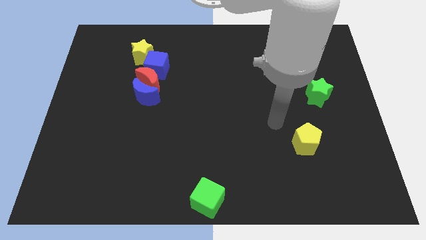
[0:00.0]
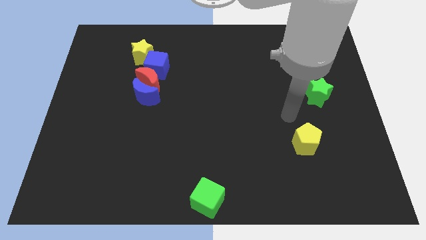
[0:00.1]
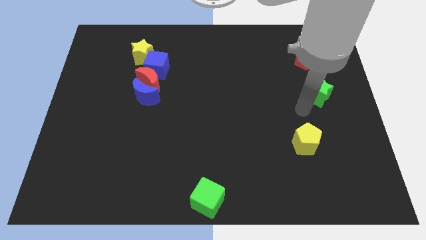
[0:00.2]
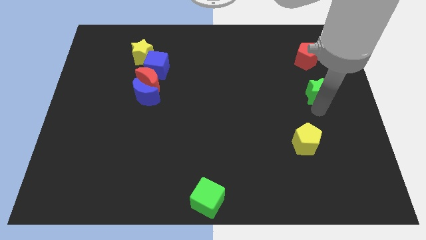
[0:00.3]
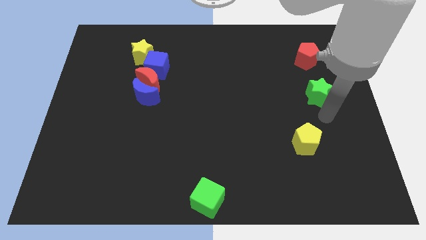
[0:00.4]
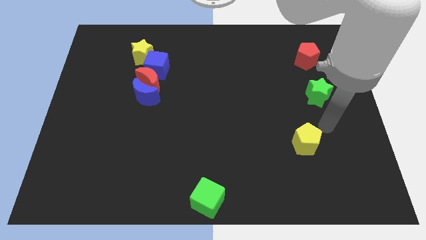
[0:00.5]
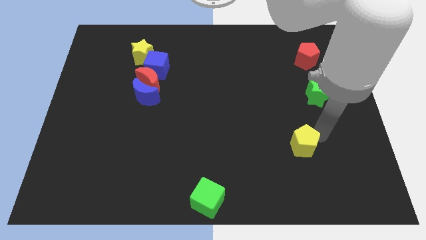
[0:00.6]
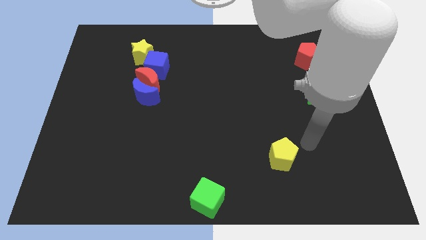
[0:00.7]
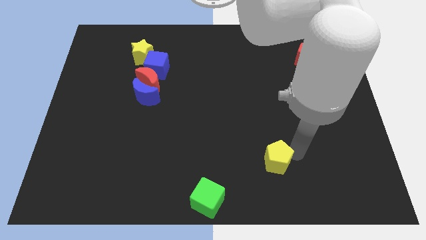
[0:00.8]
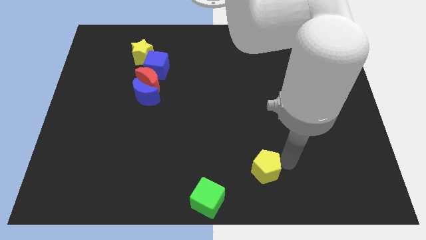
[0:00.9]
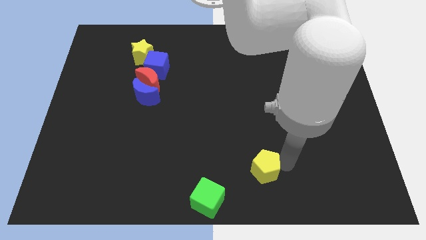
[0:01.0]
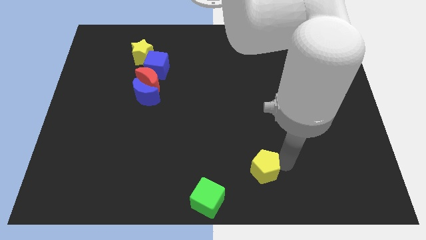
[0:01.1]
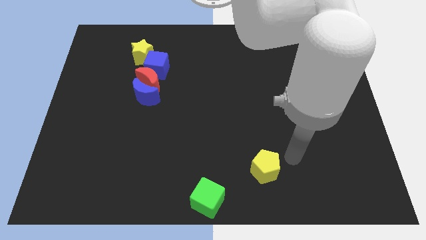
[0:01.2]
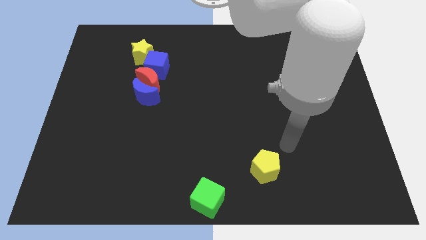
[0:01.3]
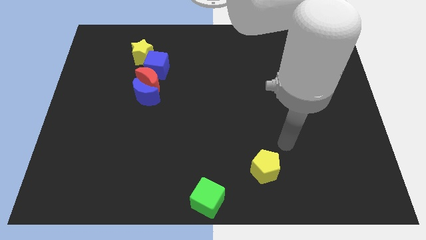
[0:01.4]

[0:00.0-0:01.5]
push yellow pentagon towards the green block

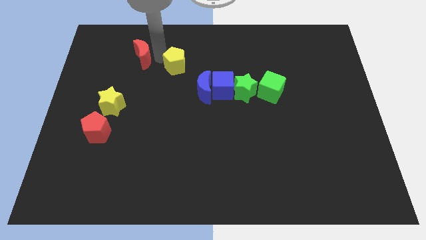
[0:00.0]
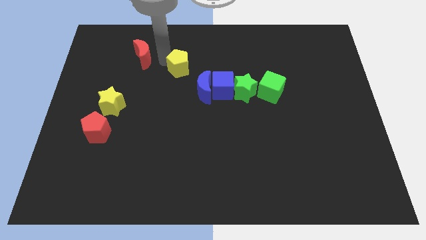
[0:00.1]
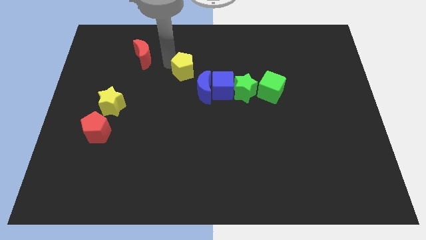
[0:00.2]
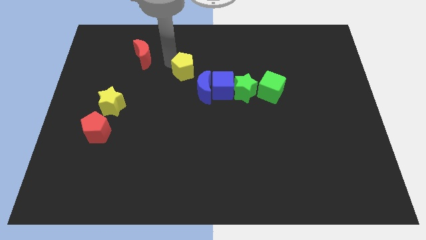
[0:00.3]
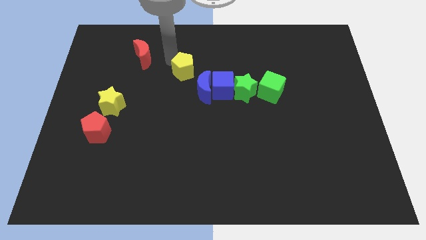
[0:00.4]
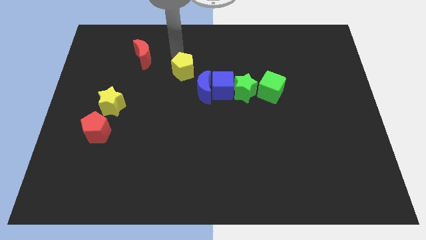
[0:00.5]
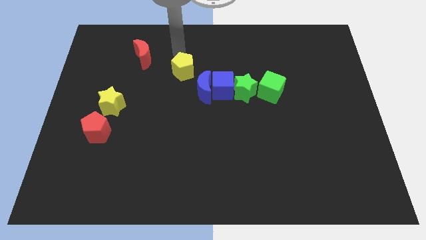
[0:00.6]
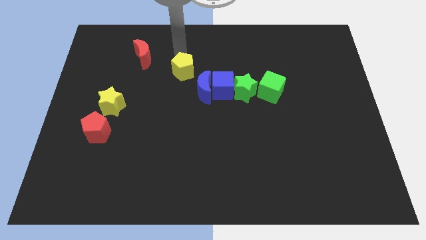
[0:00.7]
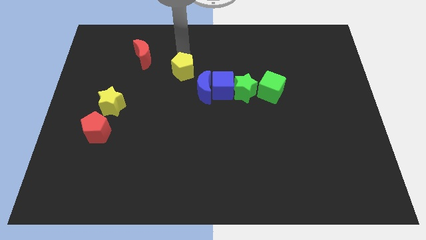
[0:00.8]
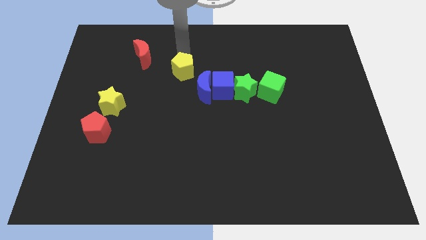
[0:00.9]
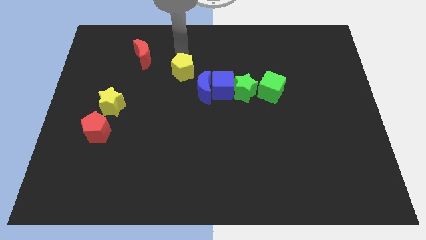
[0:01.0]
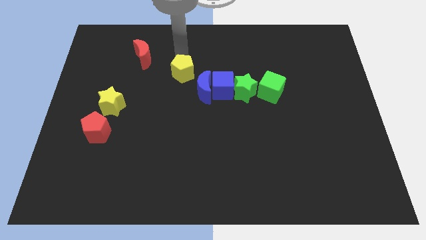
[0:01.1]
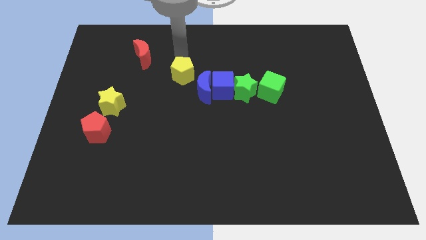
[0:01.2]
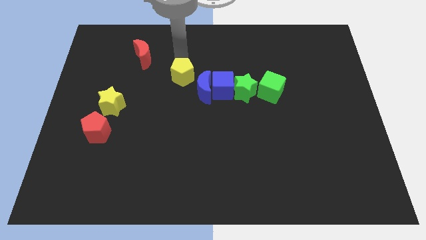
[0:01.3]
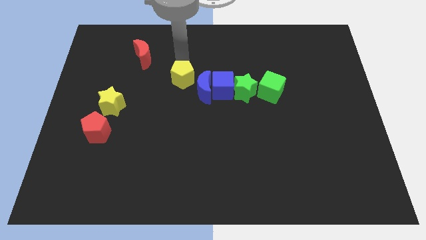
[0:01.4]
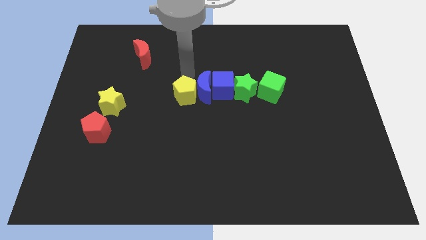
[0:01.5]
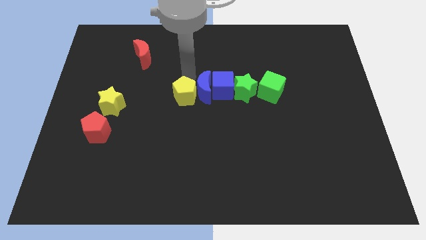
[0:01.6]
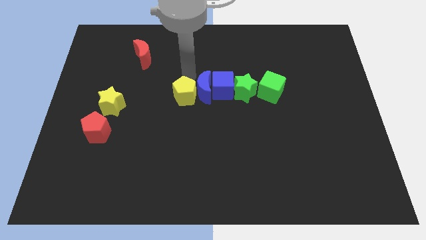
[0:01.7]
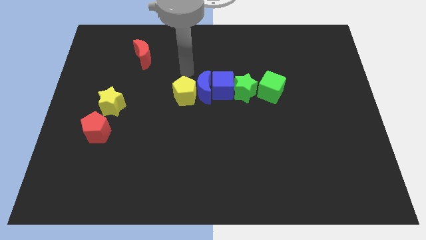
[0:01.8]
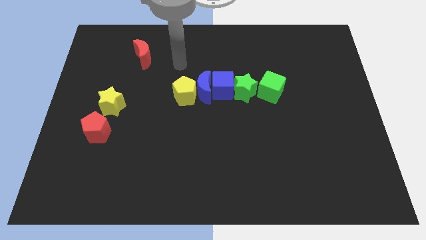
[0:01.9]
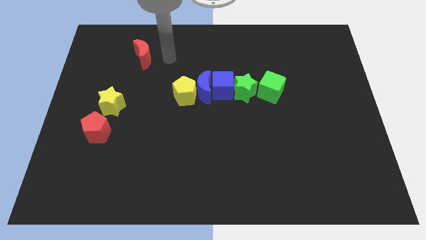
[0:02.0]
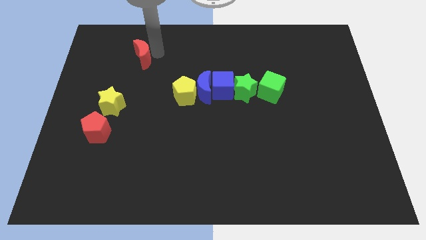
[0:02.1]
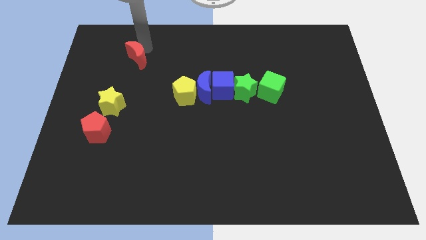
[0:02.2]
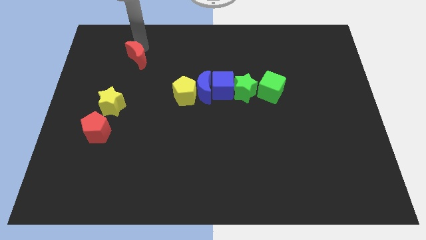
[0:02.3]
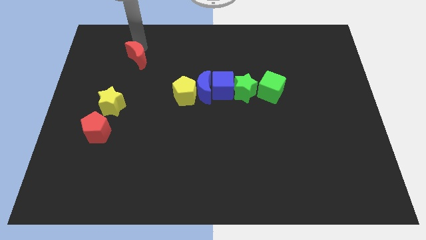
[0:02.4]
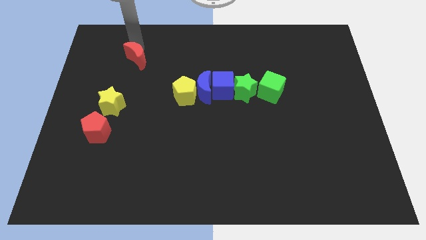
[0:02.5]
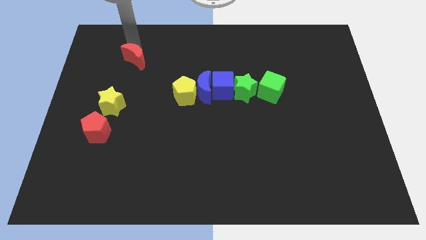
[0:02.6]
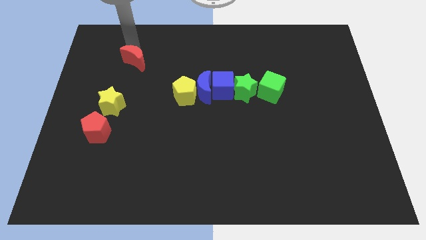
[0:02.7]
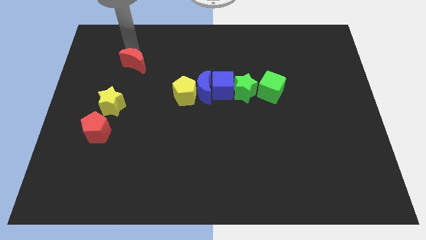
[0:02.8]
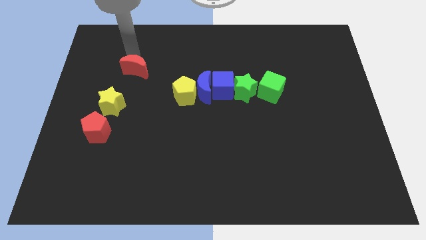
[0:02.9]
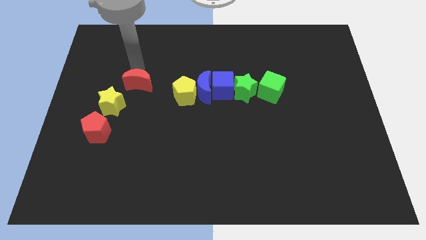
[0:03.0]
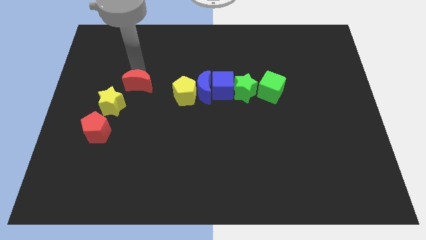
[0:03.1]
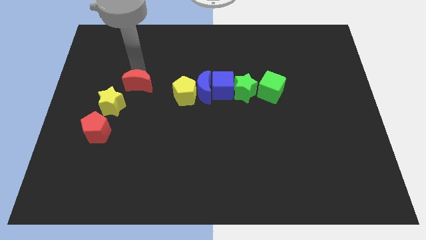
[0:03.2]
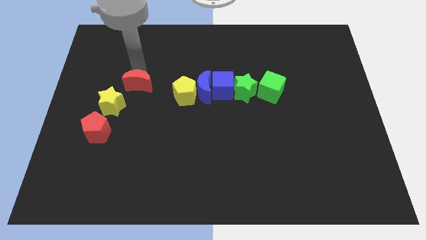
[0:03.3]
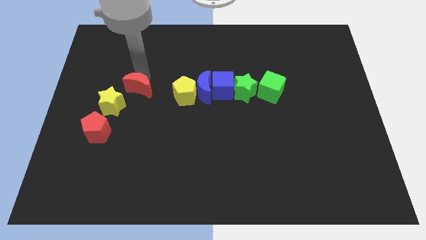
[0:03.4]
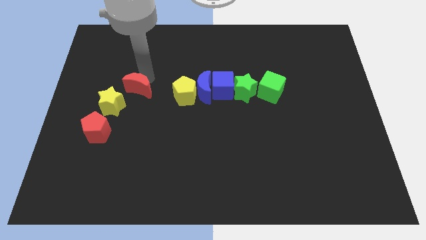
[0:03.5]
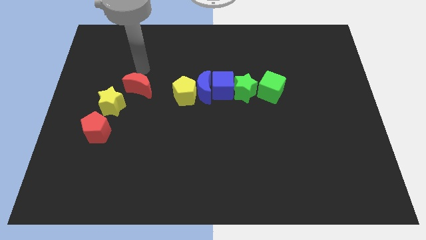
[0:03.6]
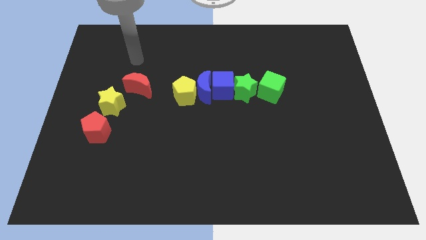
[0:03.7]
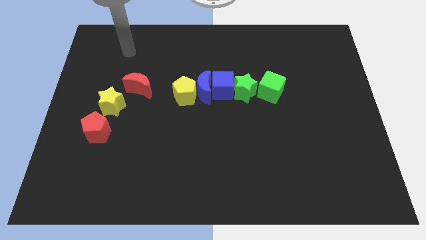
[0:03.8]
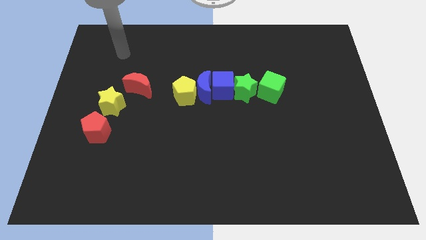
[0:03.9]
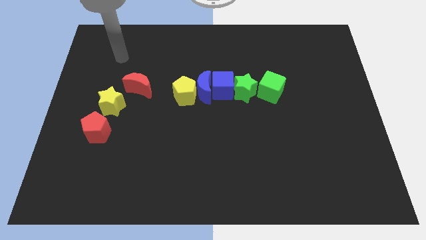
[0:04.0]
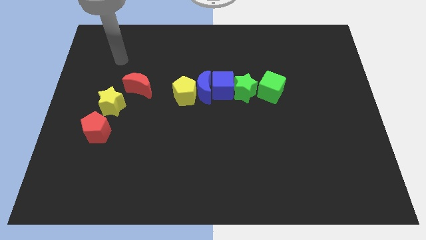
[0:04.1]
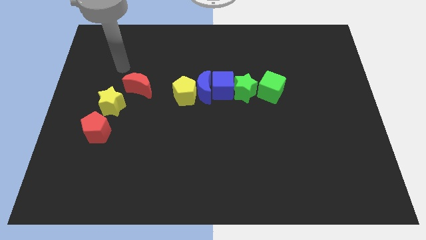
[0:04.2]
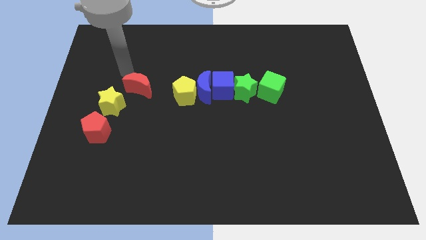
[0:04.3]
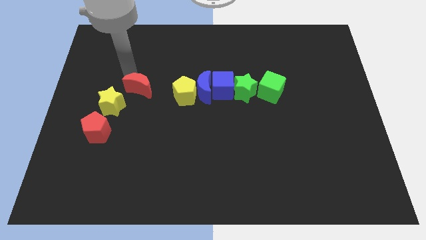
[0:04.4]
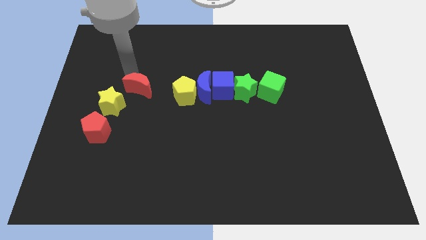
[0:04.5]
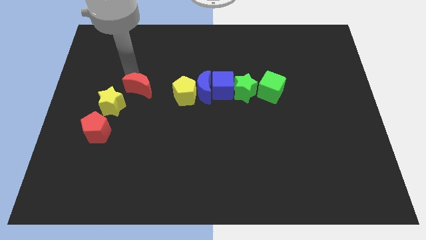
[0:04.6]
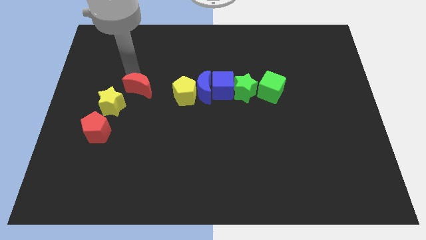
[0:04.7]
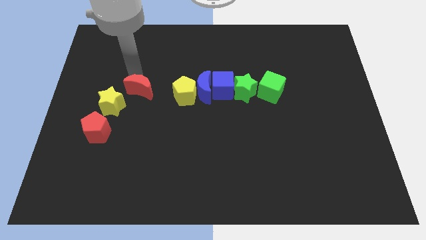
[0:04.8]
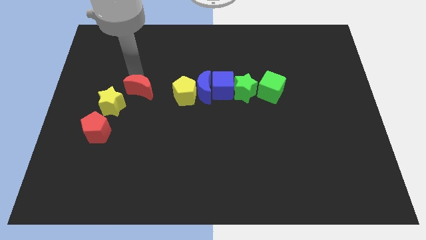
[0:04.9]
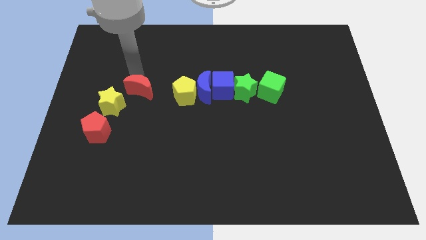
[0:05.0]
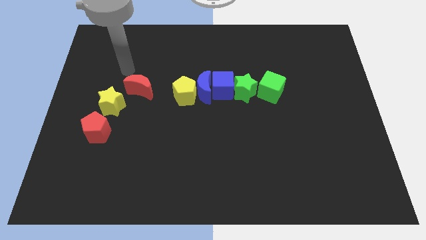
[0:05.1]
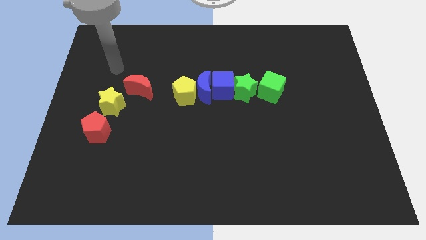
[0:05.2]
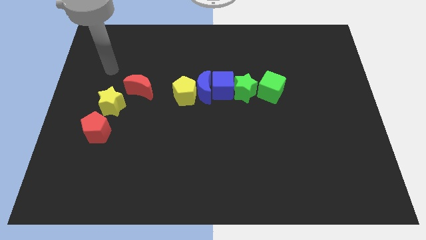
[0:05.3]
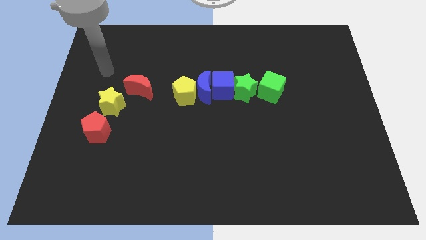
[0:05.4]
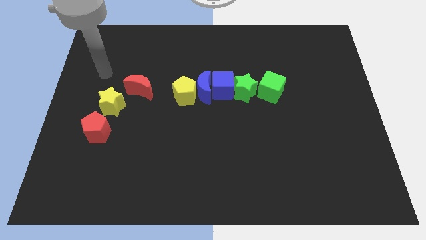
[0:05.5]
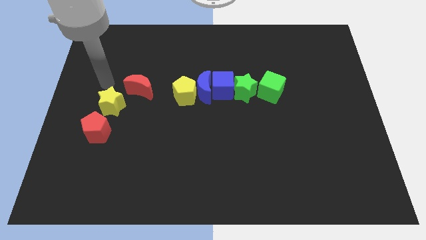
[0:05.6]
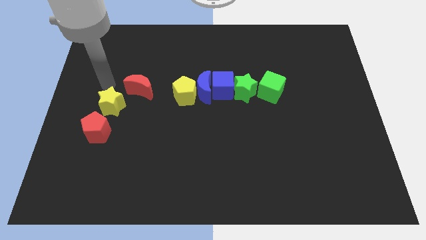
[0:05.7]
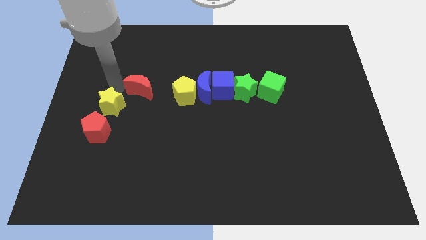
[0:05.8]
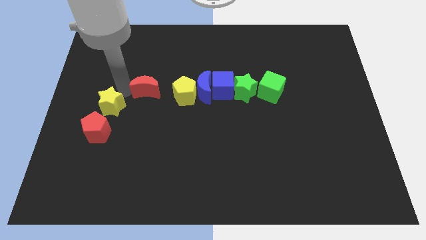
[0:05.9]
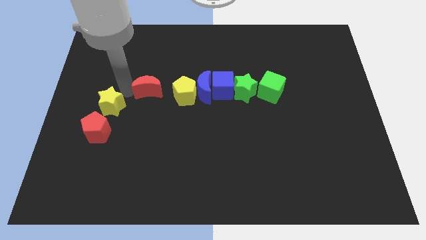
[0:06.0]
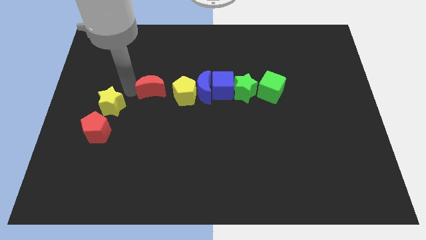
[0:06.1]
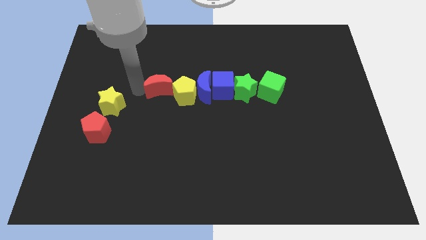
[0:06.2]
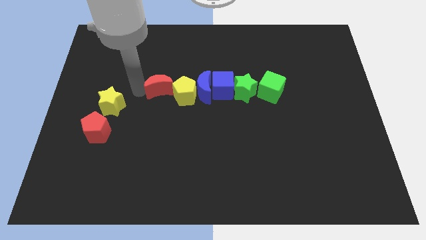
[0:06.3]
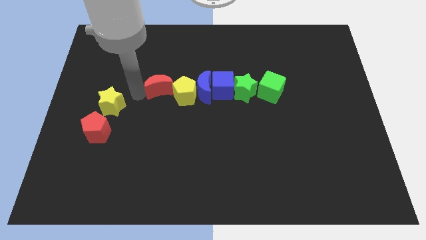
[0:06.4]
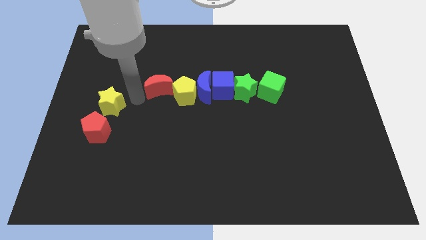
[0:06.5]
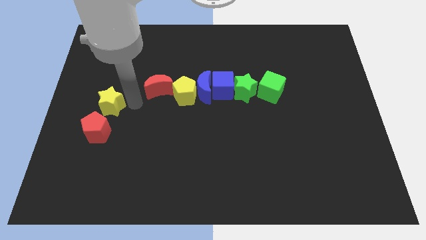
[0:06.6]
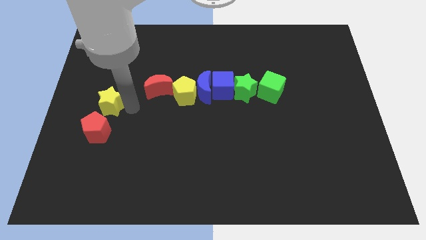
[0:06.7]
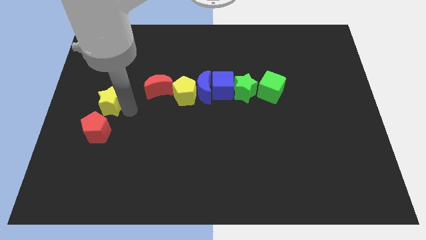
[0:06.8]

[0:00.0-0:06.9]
join yellow pentagon and the red crescent with the group of blocks

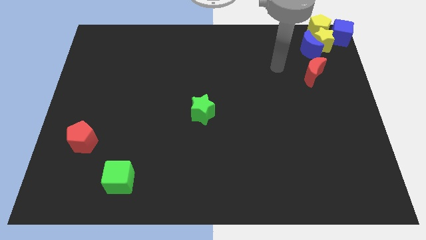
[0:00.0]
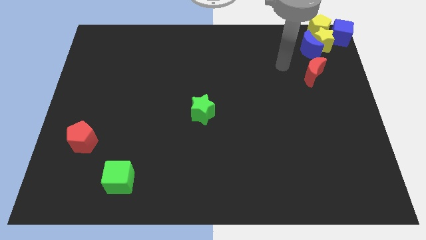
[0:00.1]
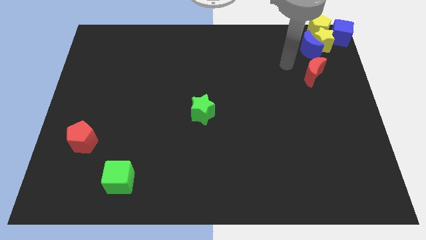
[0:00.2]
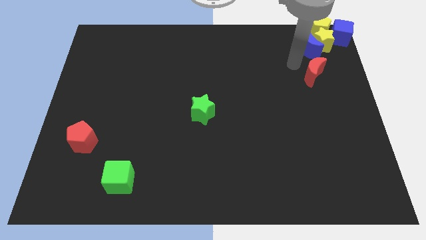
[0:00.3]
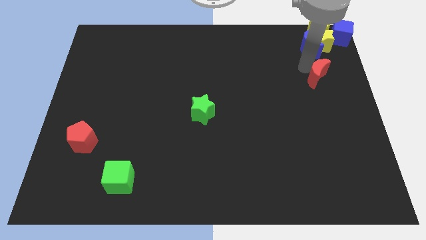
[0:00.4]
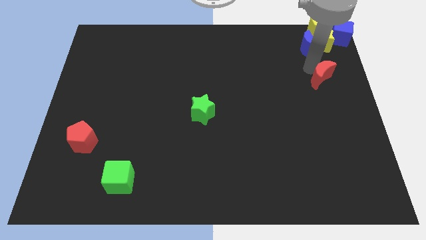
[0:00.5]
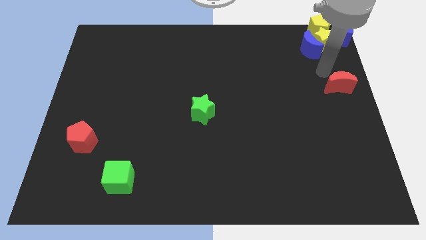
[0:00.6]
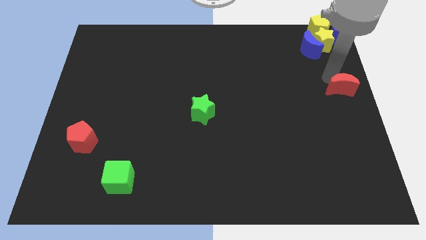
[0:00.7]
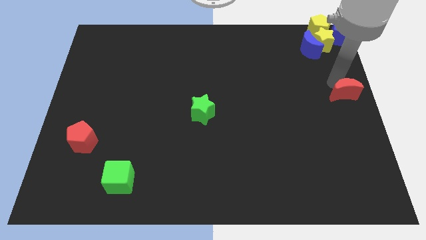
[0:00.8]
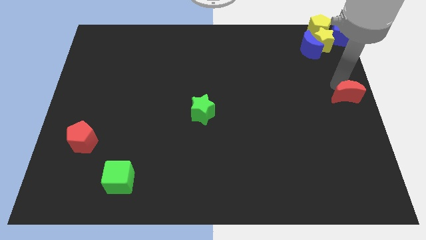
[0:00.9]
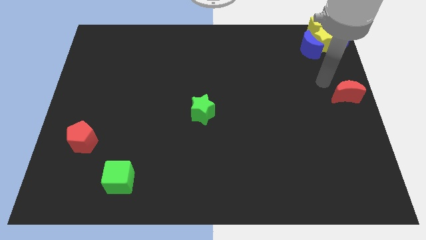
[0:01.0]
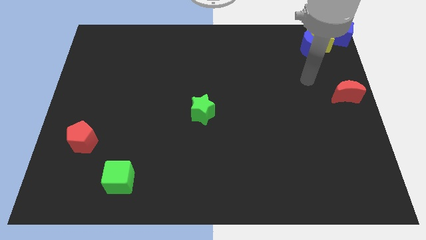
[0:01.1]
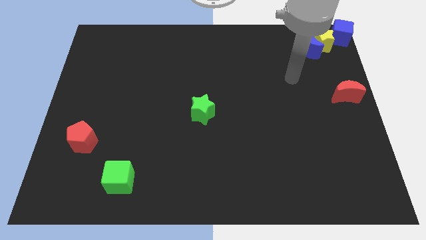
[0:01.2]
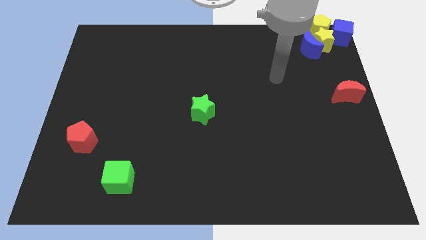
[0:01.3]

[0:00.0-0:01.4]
push the red crescent to the center right side of the board
